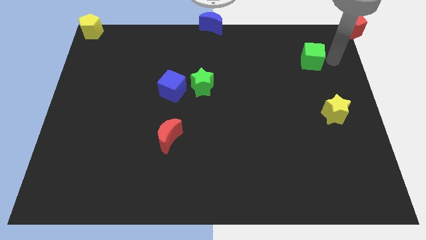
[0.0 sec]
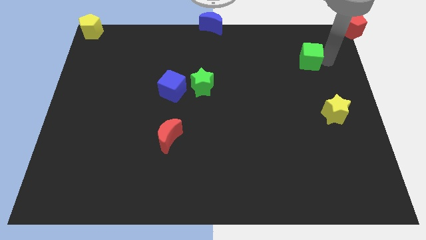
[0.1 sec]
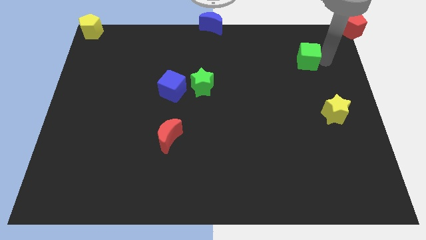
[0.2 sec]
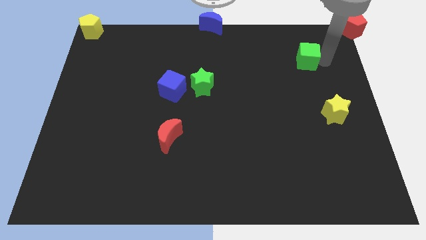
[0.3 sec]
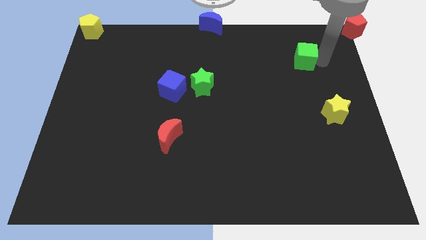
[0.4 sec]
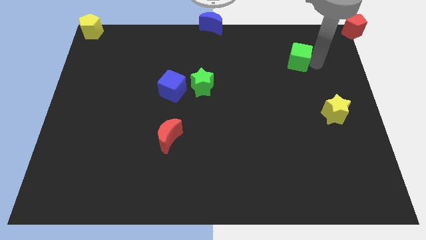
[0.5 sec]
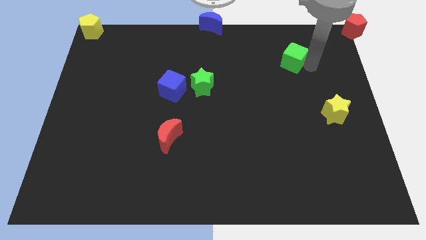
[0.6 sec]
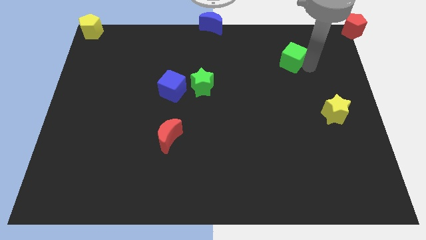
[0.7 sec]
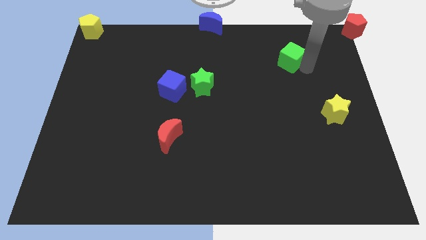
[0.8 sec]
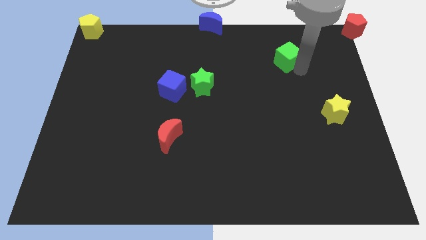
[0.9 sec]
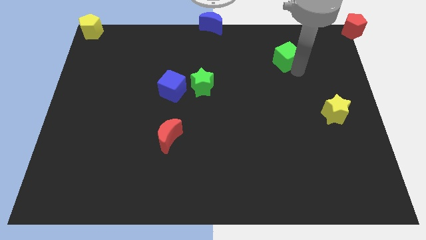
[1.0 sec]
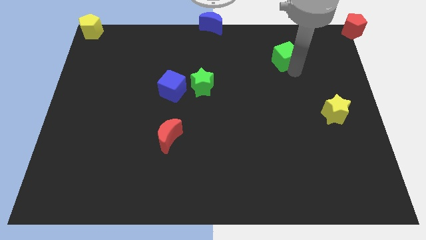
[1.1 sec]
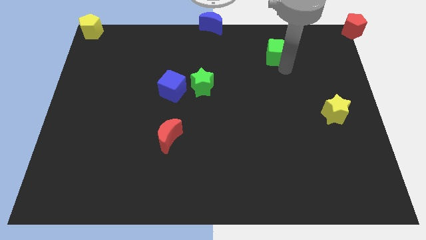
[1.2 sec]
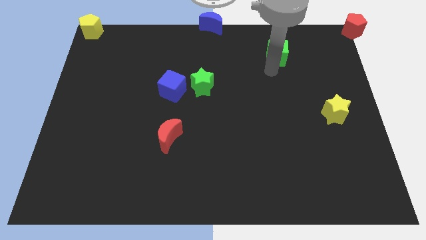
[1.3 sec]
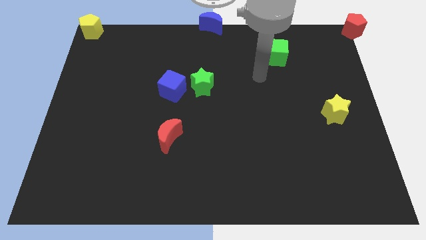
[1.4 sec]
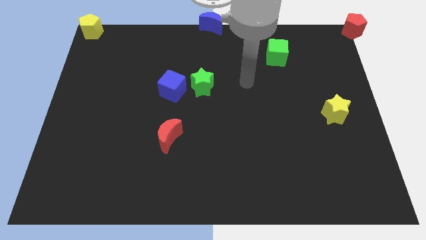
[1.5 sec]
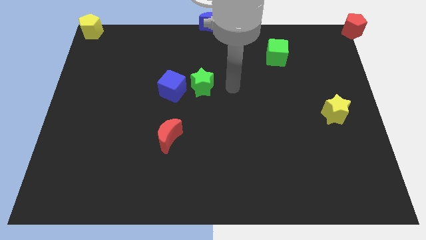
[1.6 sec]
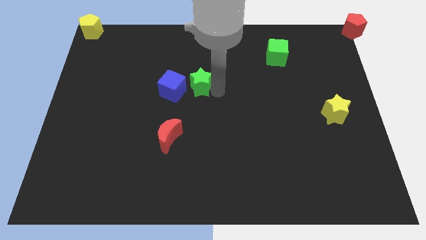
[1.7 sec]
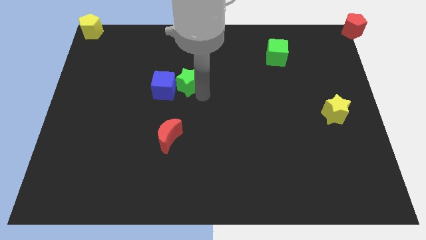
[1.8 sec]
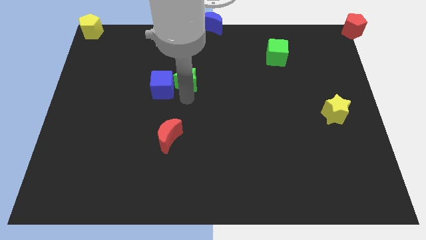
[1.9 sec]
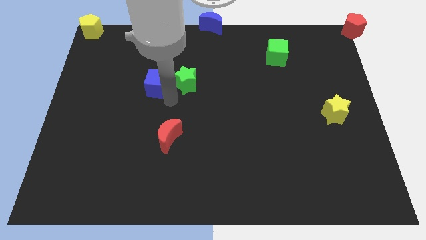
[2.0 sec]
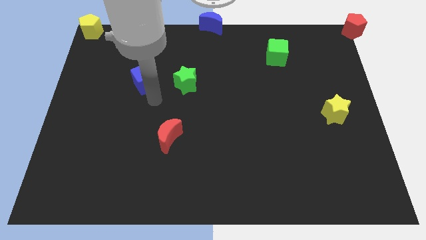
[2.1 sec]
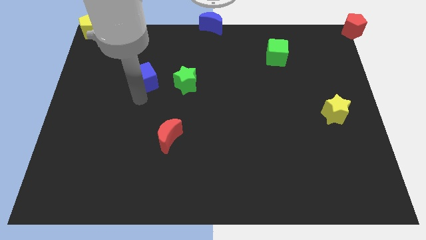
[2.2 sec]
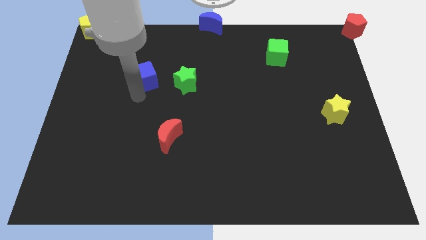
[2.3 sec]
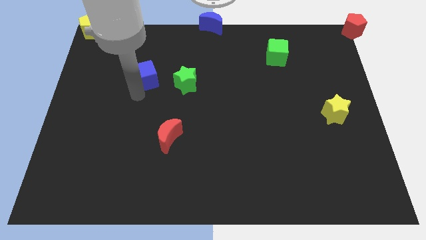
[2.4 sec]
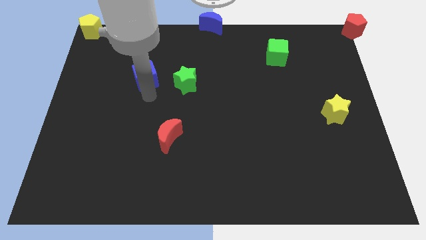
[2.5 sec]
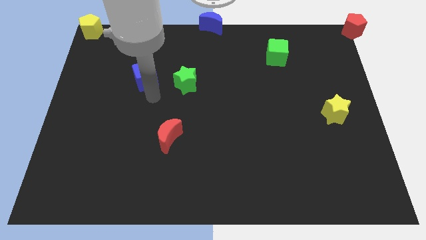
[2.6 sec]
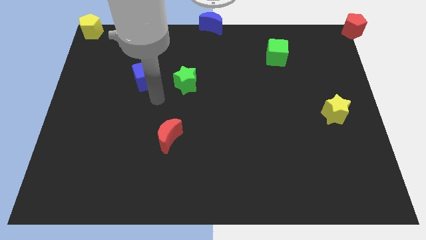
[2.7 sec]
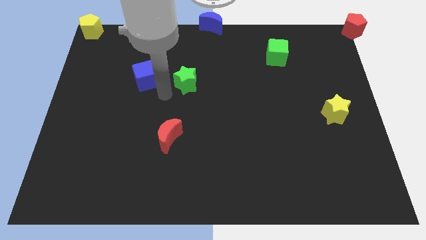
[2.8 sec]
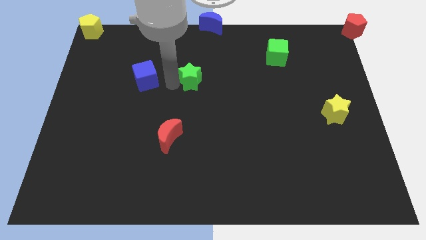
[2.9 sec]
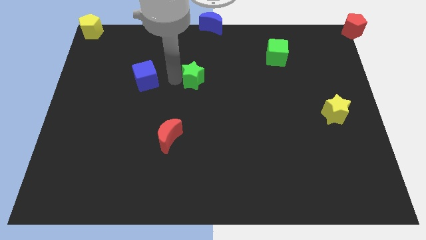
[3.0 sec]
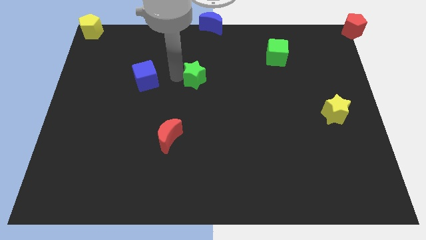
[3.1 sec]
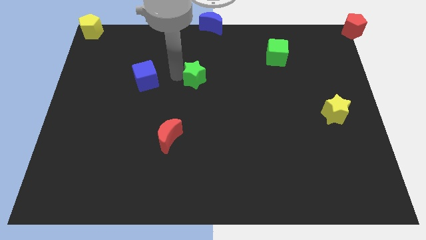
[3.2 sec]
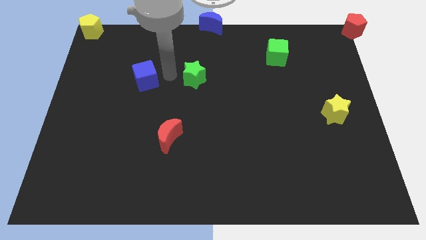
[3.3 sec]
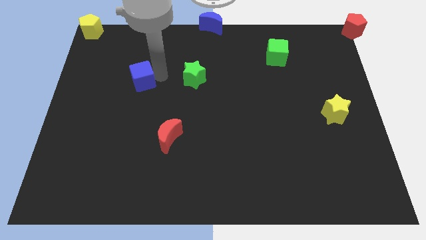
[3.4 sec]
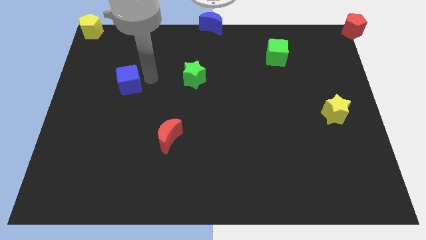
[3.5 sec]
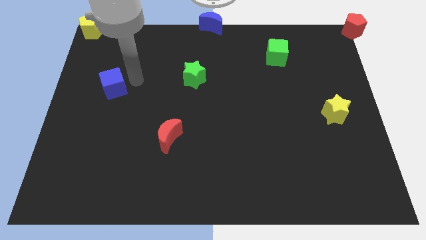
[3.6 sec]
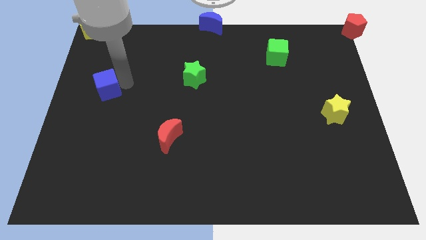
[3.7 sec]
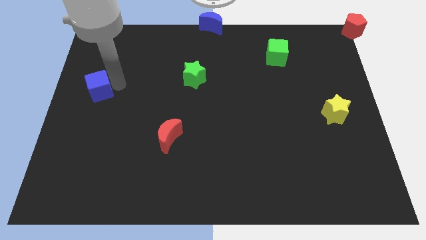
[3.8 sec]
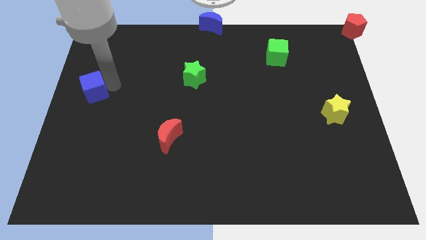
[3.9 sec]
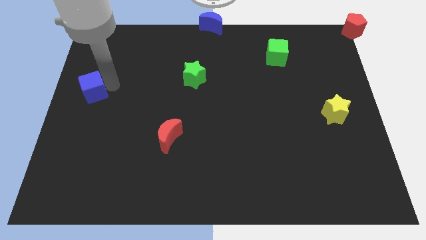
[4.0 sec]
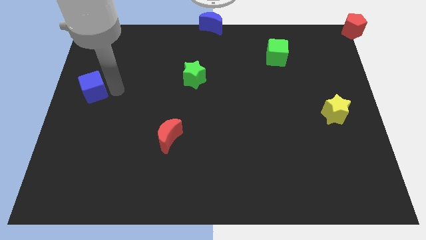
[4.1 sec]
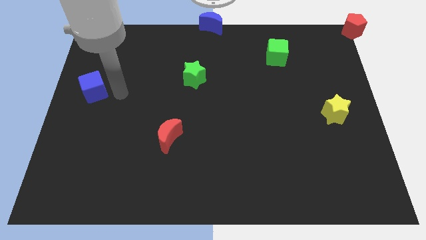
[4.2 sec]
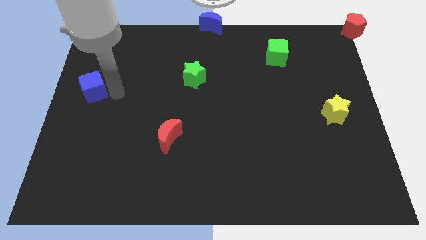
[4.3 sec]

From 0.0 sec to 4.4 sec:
adjust the green star in between green cube and blue cube

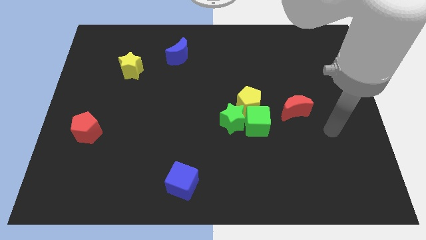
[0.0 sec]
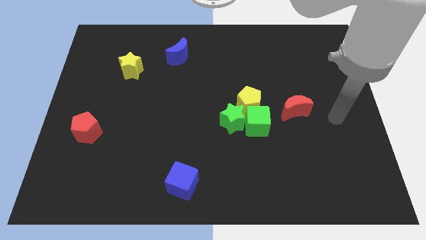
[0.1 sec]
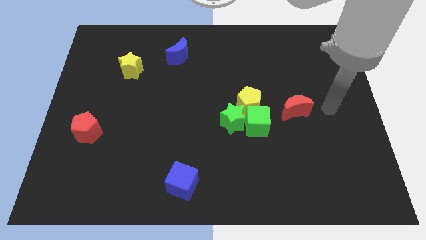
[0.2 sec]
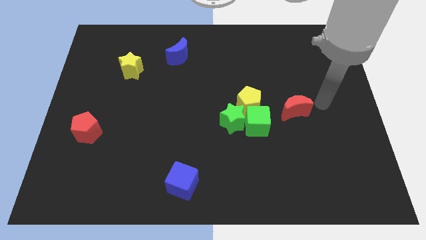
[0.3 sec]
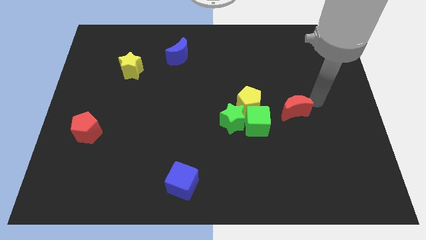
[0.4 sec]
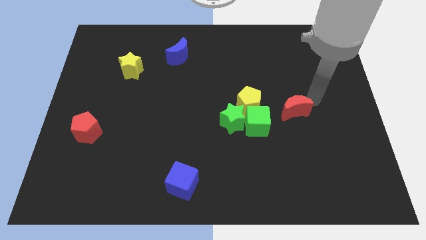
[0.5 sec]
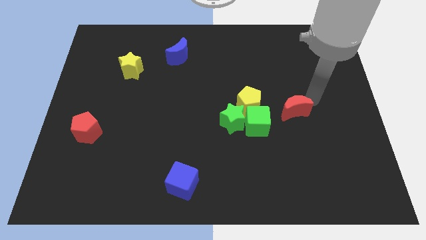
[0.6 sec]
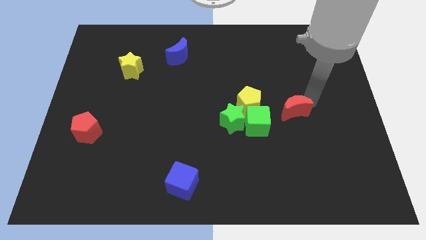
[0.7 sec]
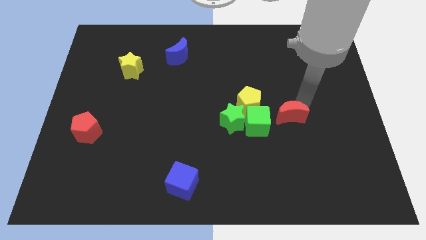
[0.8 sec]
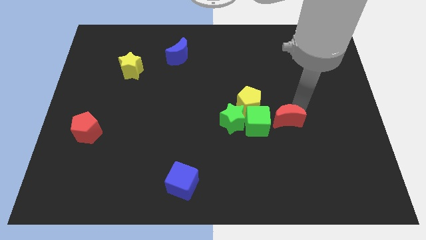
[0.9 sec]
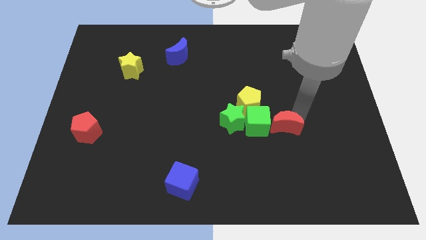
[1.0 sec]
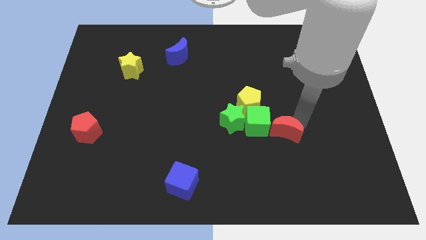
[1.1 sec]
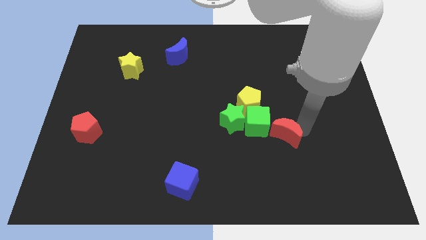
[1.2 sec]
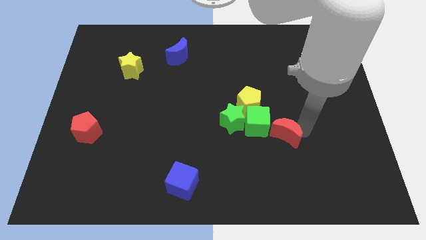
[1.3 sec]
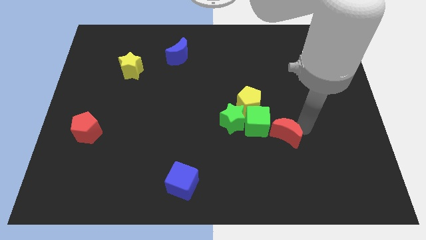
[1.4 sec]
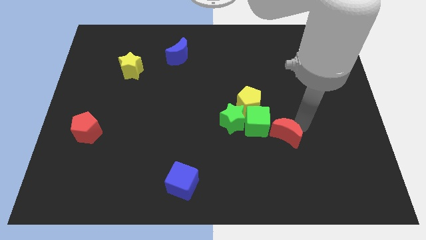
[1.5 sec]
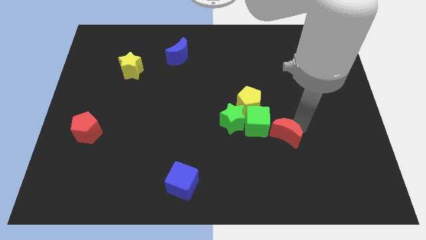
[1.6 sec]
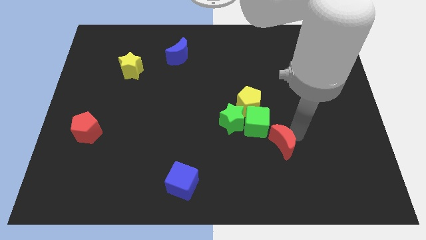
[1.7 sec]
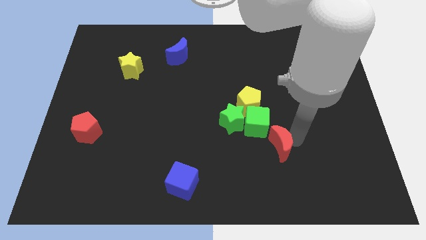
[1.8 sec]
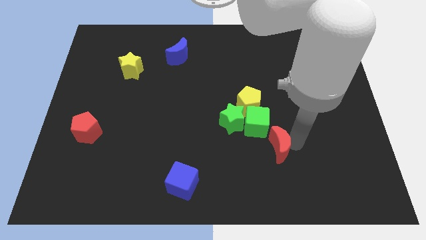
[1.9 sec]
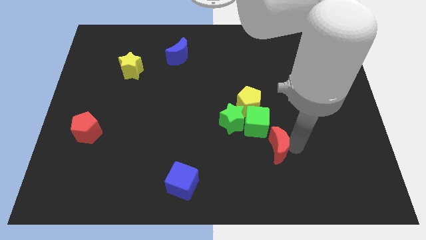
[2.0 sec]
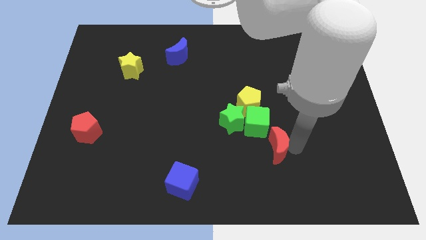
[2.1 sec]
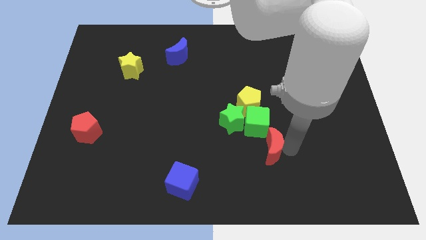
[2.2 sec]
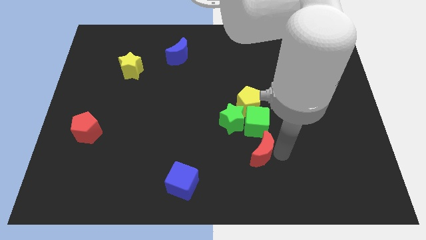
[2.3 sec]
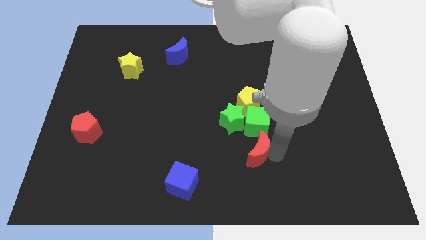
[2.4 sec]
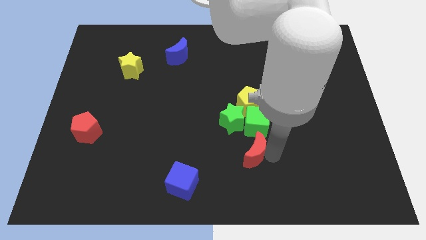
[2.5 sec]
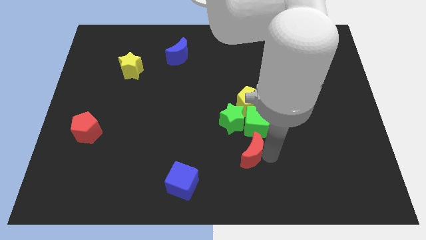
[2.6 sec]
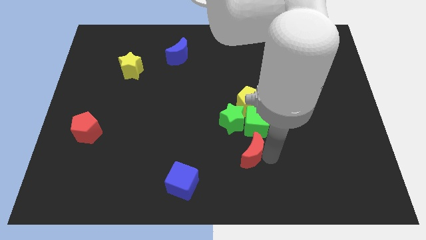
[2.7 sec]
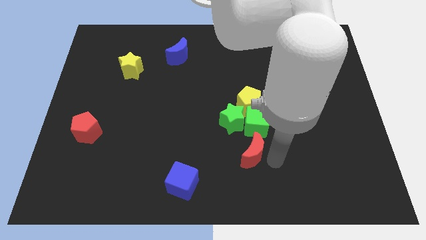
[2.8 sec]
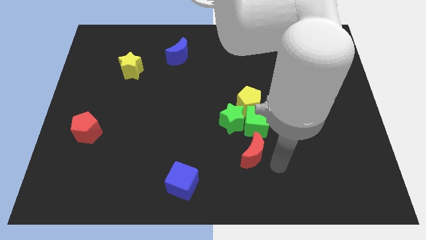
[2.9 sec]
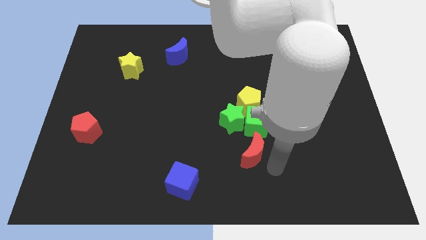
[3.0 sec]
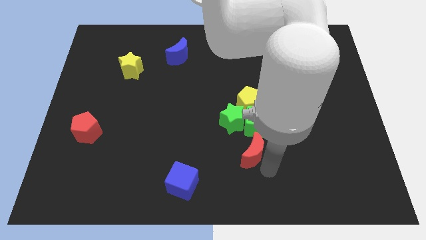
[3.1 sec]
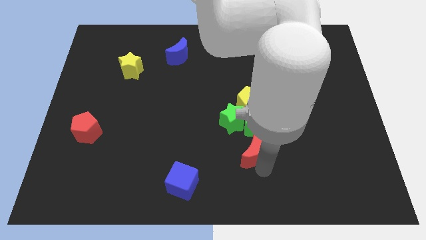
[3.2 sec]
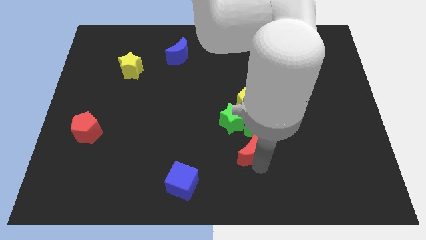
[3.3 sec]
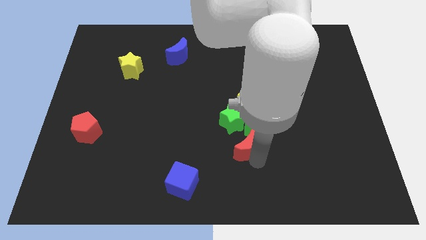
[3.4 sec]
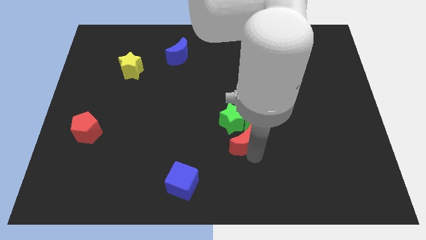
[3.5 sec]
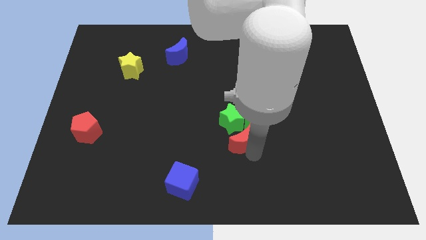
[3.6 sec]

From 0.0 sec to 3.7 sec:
place the red crescent into the green cube

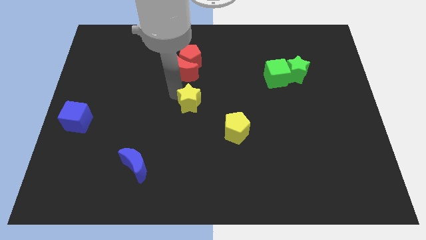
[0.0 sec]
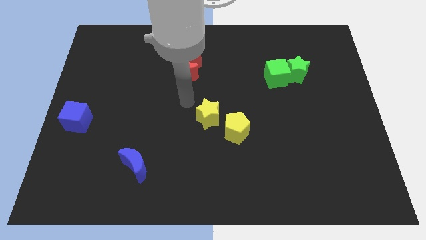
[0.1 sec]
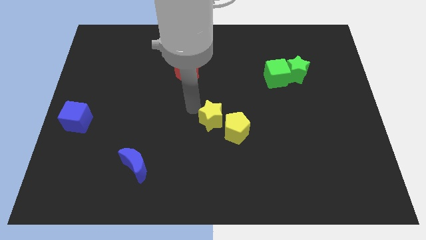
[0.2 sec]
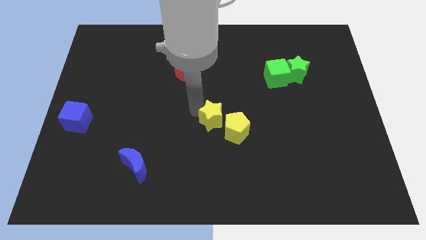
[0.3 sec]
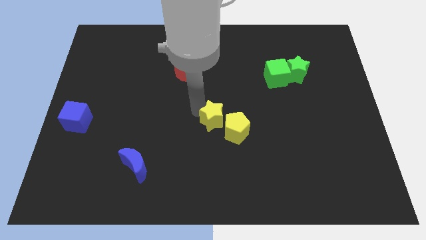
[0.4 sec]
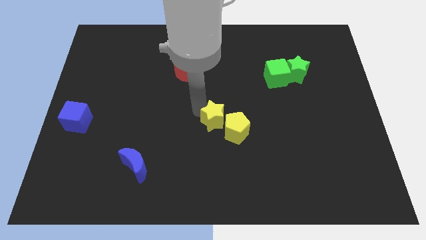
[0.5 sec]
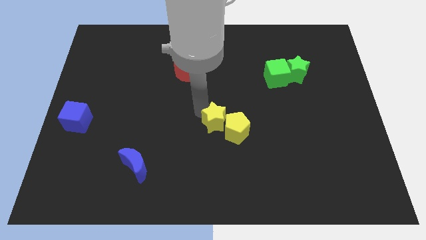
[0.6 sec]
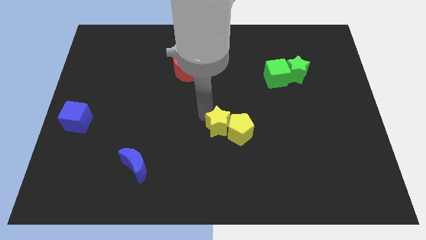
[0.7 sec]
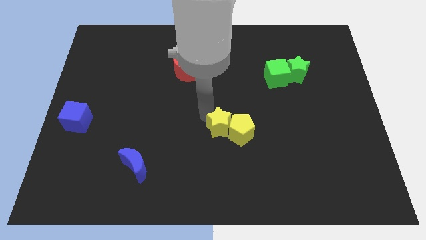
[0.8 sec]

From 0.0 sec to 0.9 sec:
place the yellow star left to the yellow pentagon
